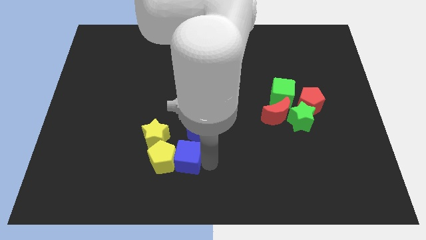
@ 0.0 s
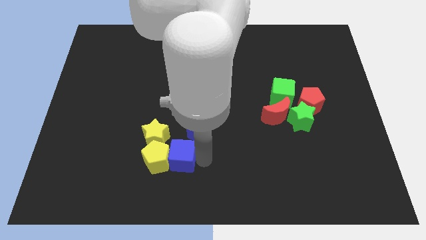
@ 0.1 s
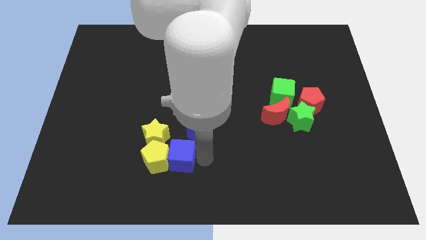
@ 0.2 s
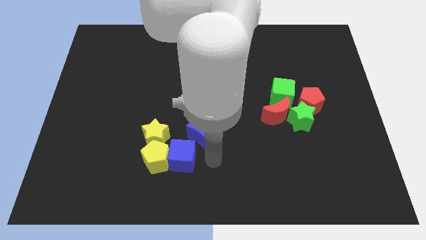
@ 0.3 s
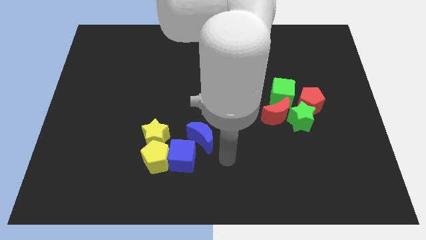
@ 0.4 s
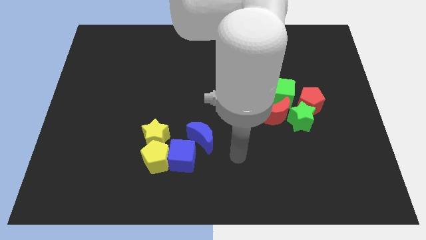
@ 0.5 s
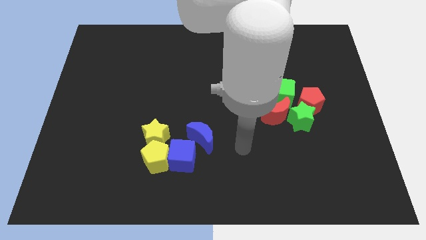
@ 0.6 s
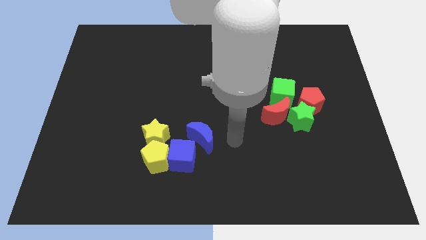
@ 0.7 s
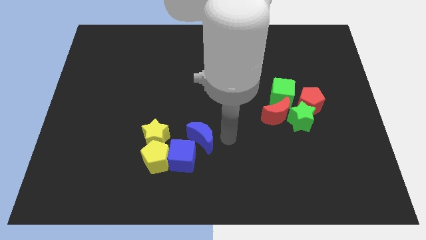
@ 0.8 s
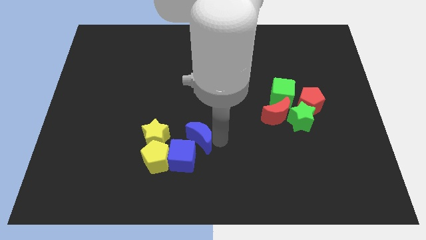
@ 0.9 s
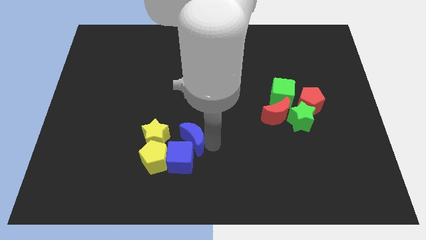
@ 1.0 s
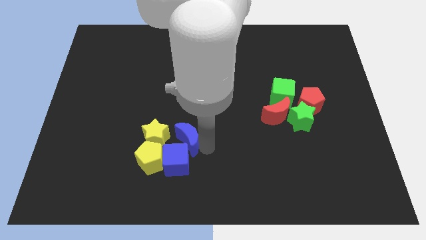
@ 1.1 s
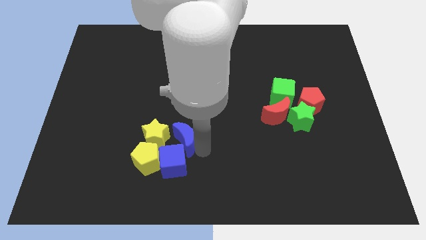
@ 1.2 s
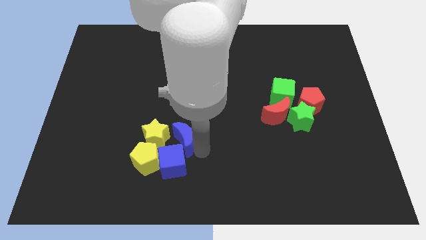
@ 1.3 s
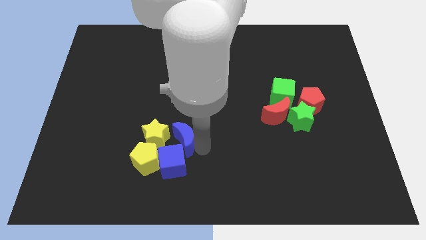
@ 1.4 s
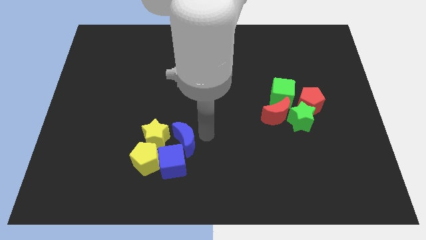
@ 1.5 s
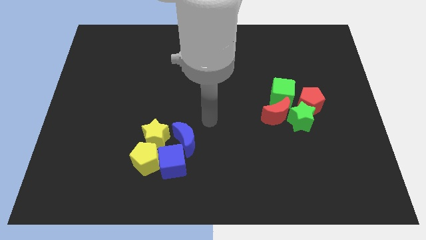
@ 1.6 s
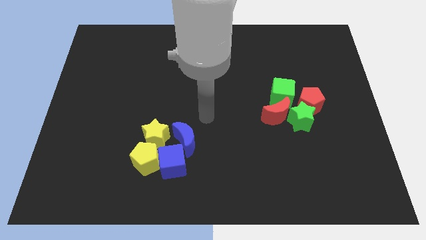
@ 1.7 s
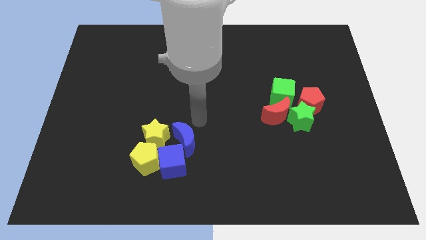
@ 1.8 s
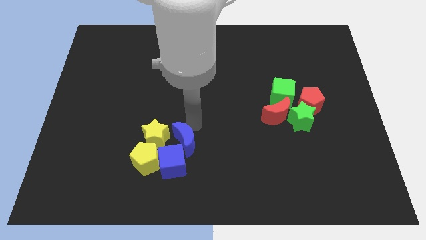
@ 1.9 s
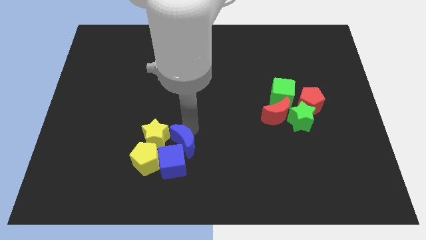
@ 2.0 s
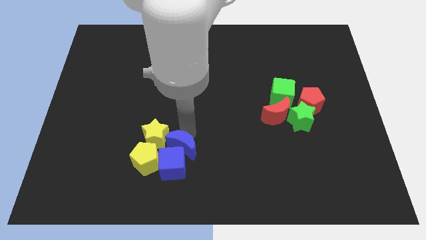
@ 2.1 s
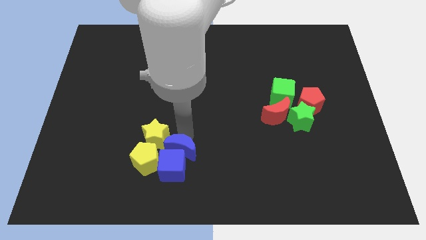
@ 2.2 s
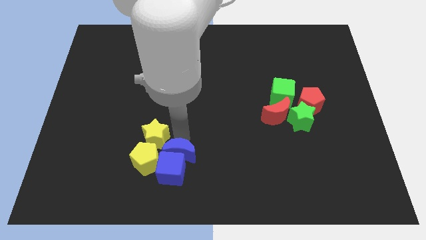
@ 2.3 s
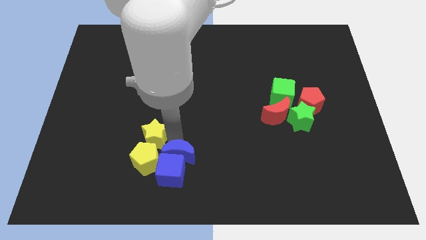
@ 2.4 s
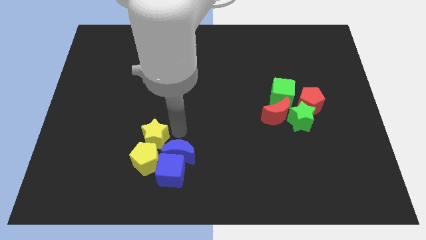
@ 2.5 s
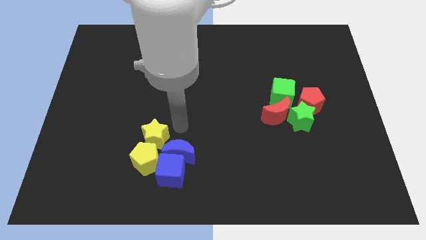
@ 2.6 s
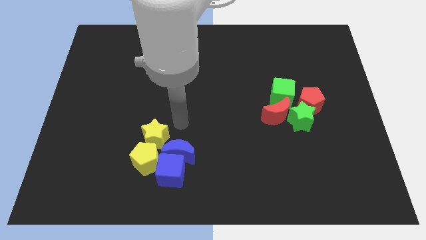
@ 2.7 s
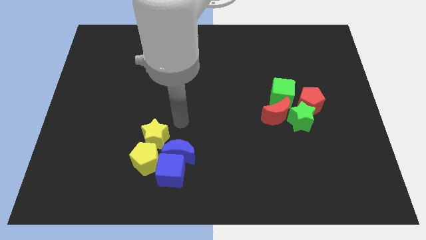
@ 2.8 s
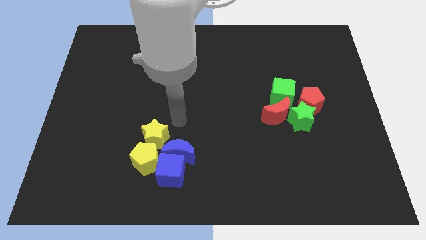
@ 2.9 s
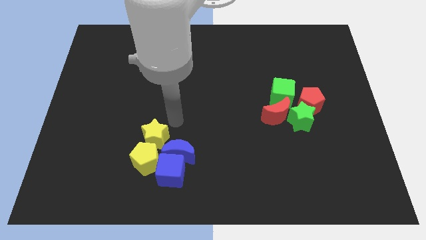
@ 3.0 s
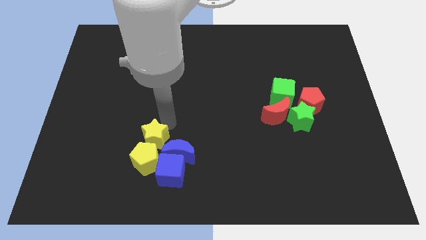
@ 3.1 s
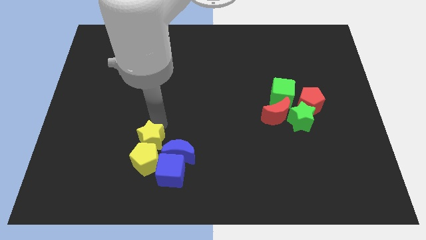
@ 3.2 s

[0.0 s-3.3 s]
push the blue moon into the group of both the yellow pentagon and yellow star blue cube

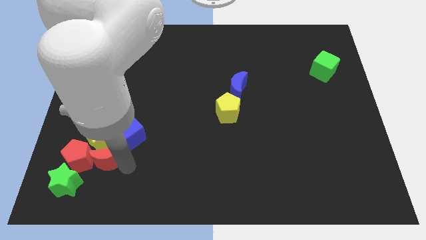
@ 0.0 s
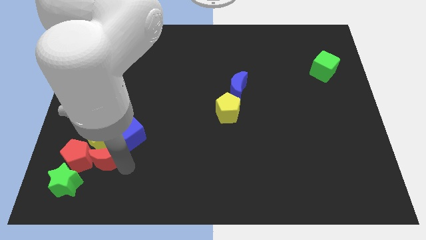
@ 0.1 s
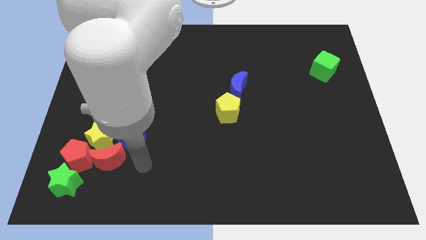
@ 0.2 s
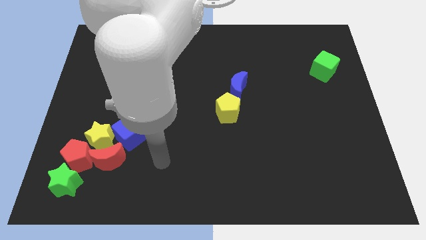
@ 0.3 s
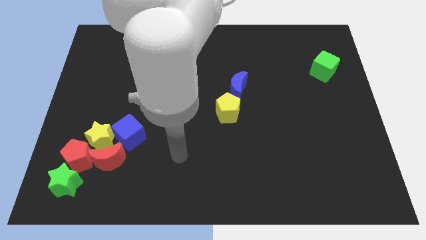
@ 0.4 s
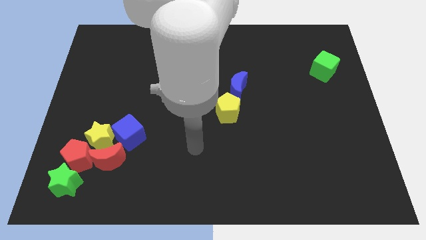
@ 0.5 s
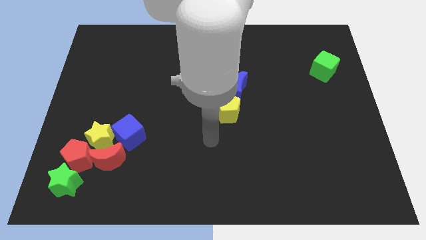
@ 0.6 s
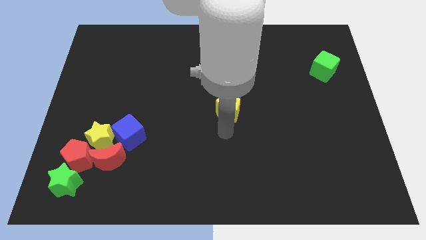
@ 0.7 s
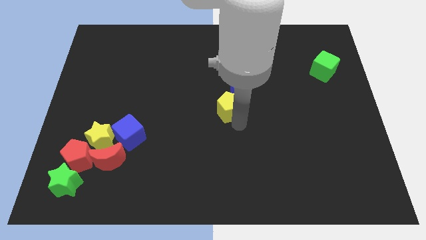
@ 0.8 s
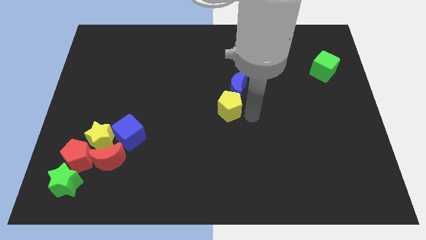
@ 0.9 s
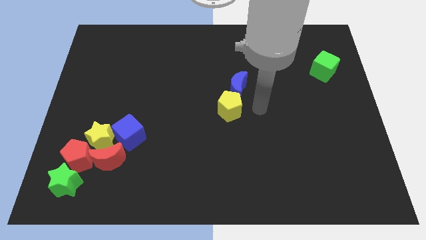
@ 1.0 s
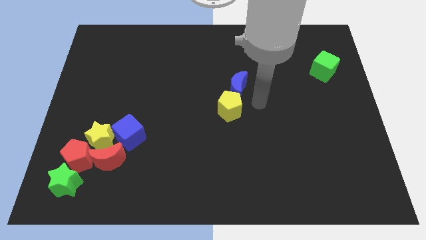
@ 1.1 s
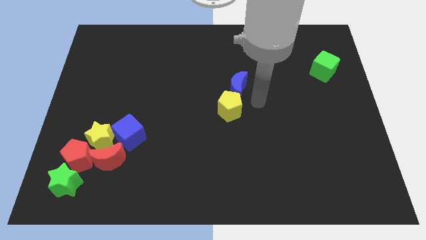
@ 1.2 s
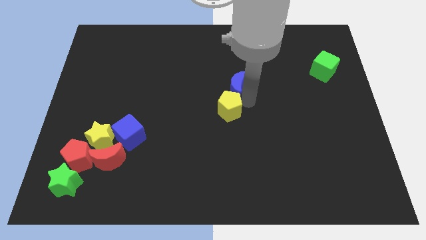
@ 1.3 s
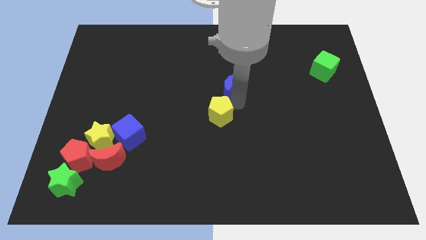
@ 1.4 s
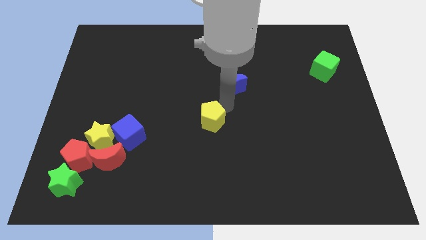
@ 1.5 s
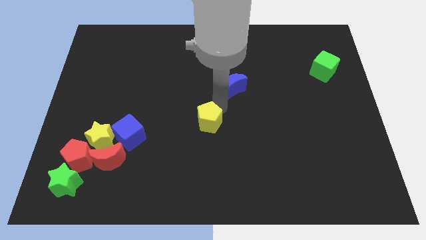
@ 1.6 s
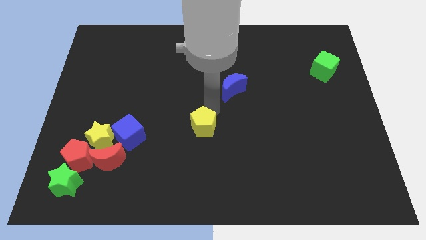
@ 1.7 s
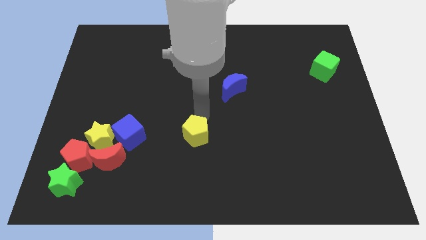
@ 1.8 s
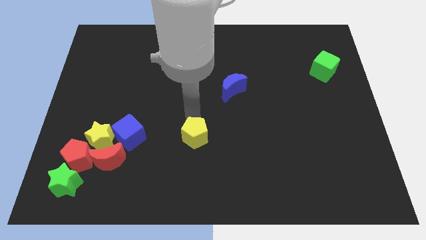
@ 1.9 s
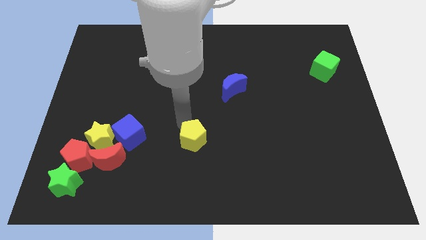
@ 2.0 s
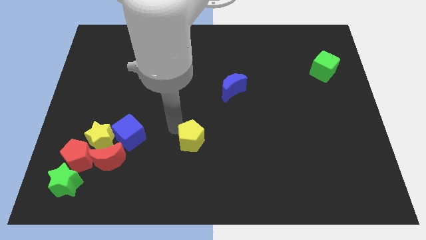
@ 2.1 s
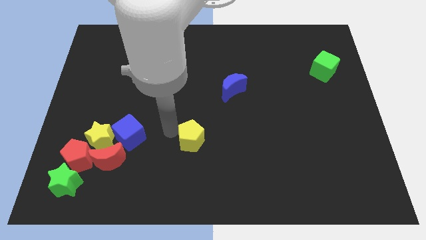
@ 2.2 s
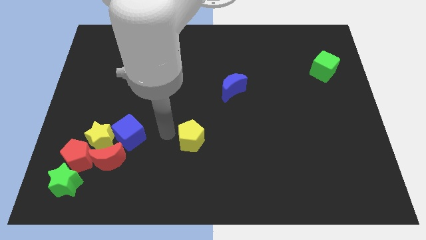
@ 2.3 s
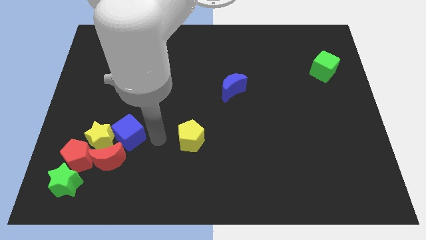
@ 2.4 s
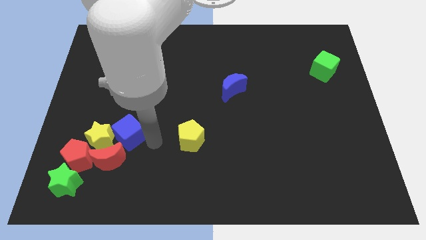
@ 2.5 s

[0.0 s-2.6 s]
move the yellow pentagon away from the blue moon

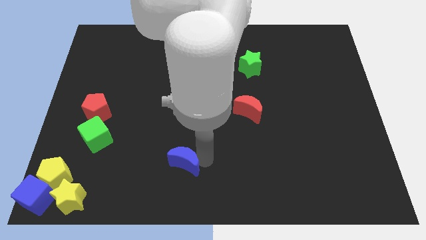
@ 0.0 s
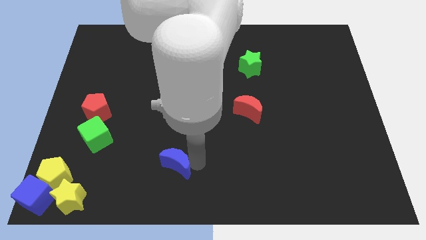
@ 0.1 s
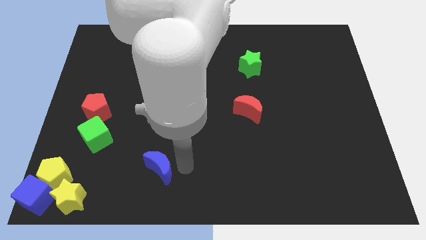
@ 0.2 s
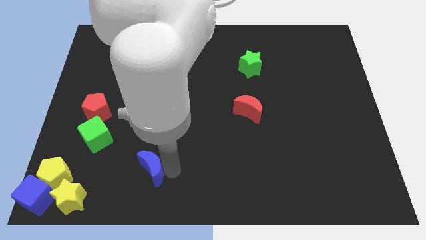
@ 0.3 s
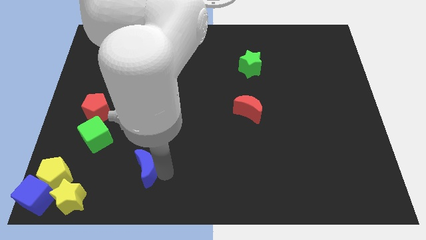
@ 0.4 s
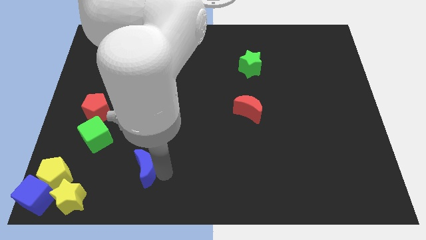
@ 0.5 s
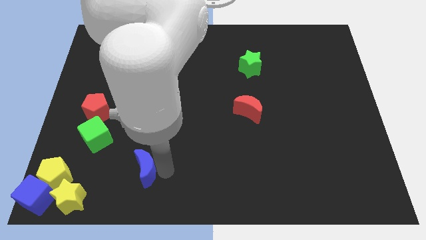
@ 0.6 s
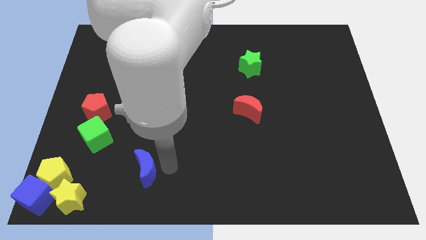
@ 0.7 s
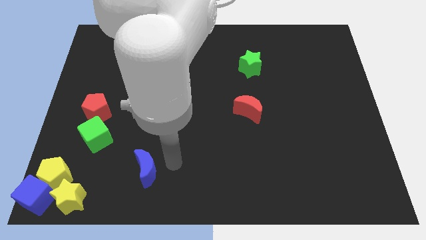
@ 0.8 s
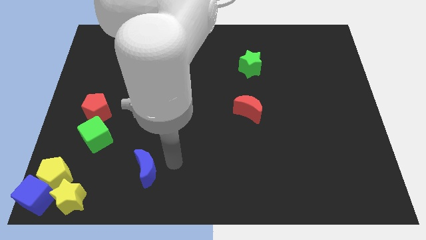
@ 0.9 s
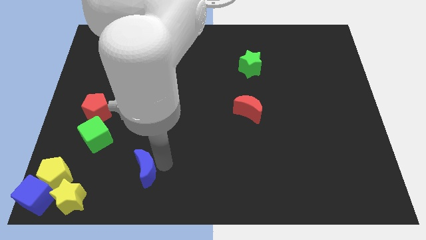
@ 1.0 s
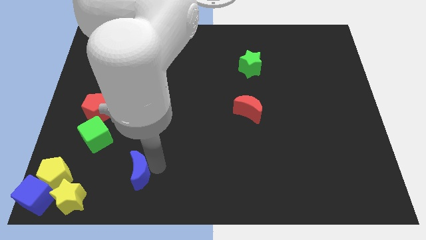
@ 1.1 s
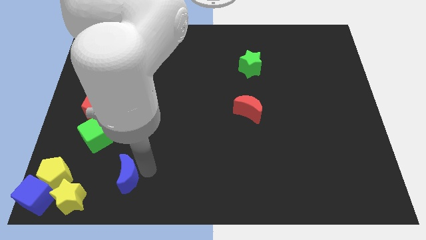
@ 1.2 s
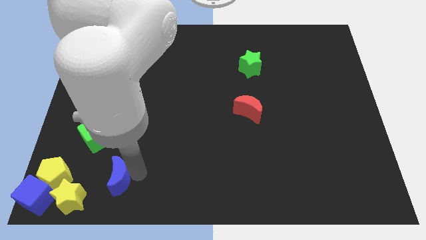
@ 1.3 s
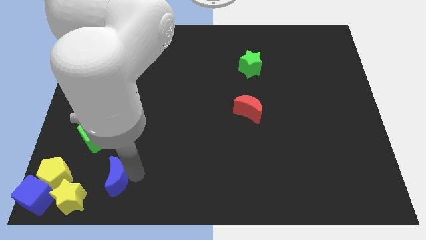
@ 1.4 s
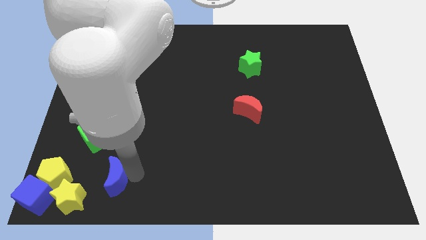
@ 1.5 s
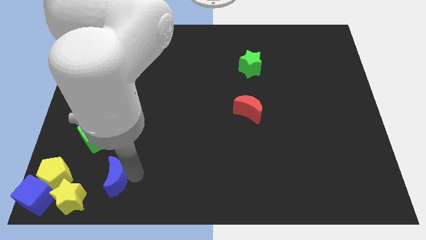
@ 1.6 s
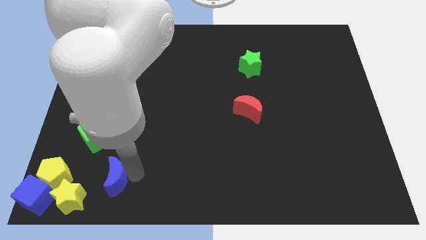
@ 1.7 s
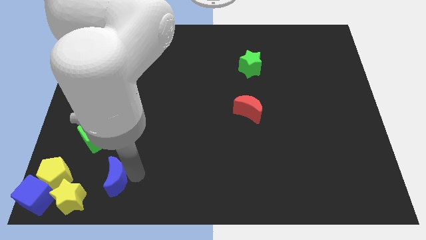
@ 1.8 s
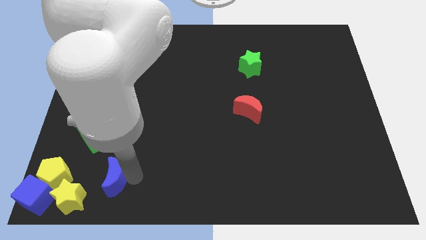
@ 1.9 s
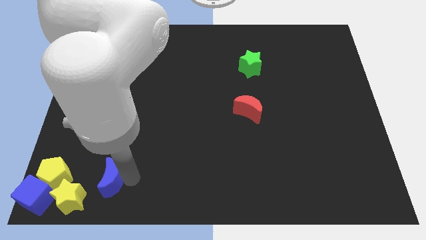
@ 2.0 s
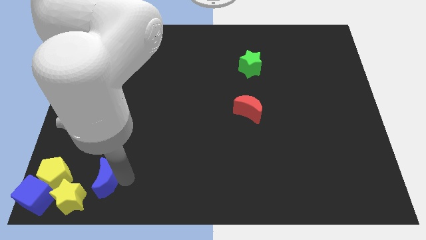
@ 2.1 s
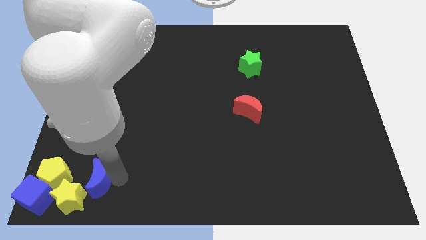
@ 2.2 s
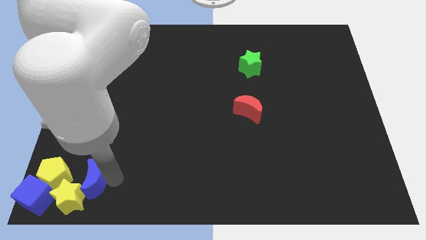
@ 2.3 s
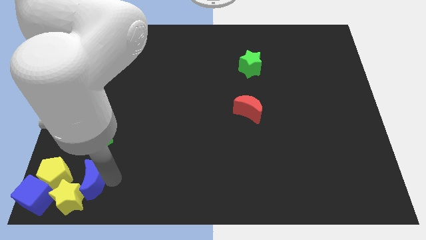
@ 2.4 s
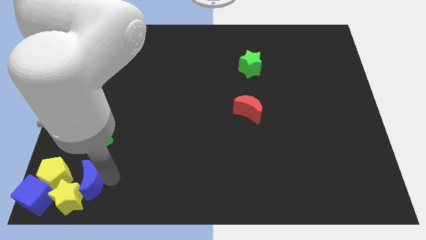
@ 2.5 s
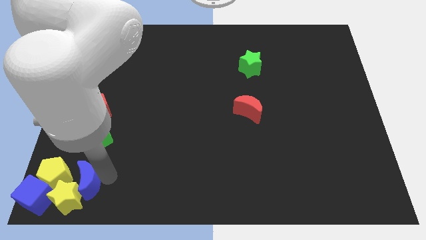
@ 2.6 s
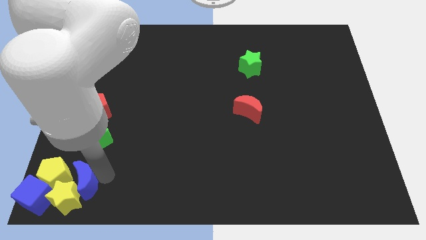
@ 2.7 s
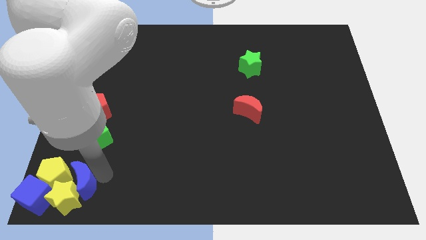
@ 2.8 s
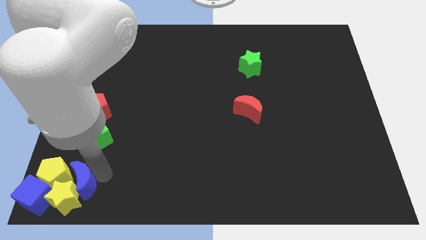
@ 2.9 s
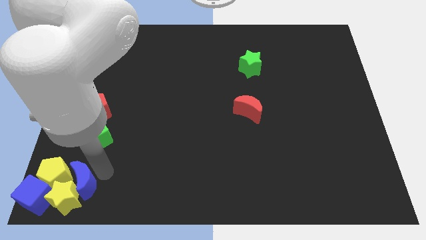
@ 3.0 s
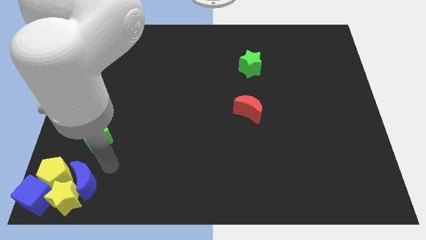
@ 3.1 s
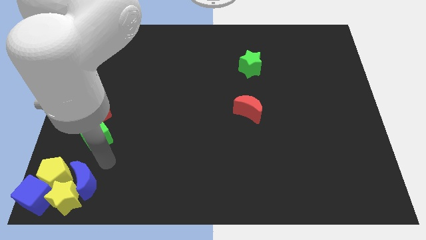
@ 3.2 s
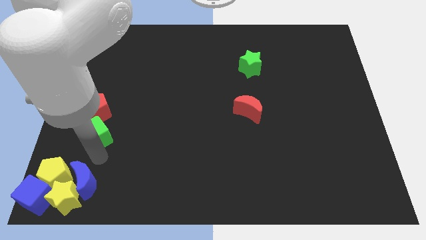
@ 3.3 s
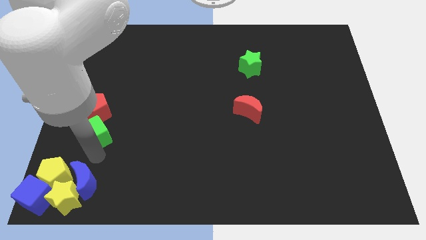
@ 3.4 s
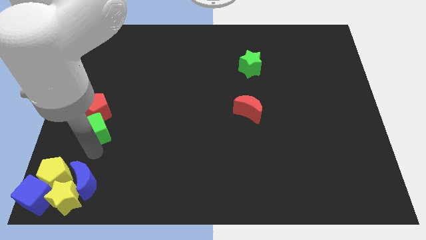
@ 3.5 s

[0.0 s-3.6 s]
push the blue moon into the group of blocks
